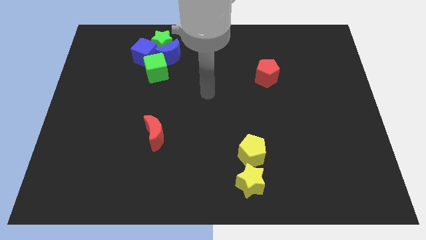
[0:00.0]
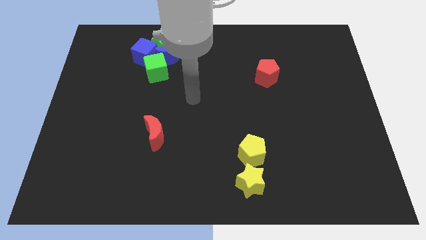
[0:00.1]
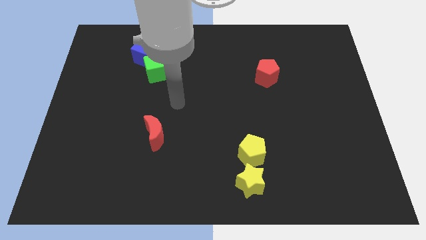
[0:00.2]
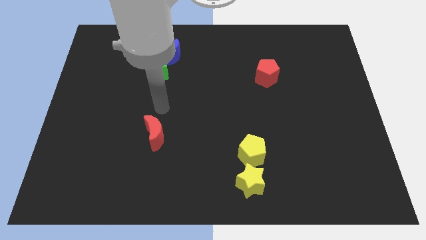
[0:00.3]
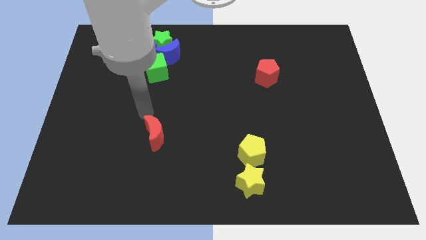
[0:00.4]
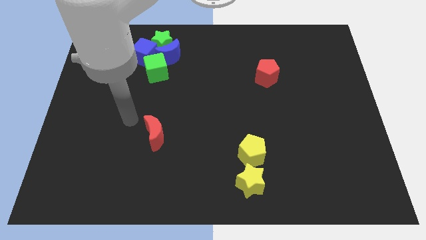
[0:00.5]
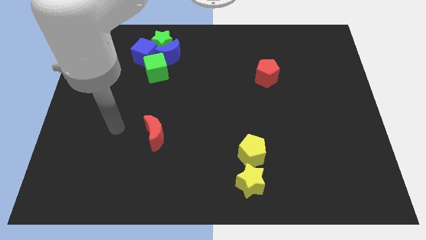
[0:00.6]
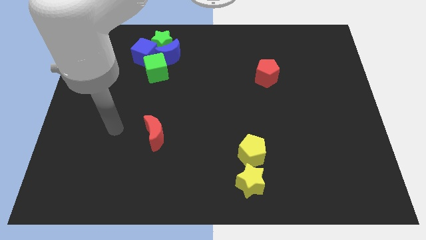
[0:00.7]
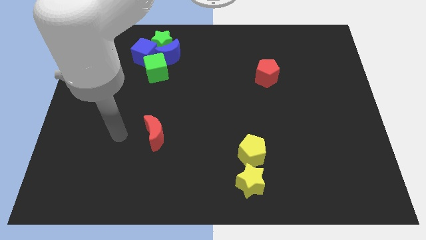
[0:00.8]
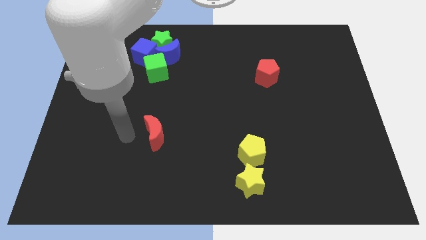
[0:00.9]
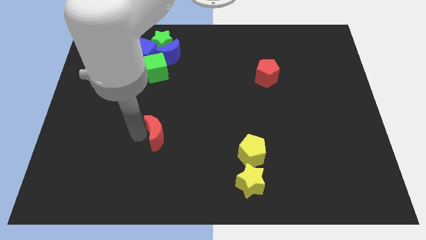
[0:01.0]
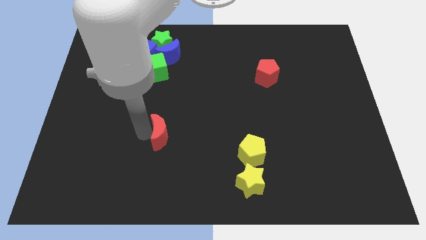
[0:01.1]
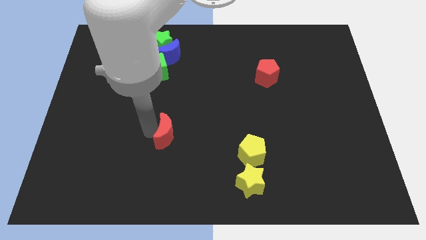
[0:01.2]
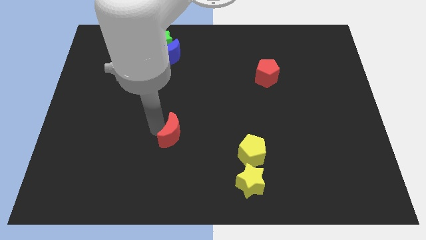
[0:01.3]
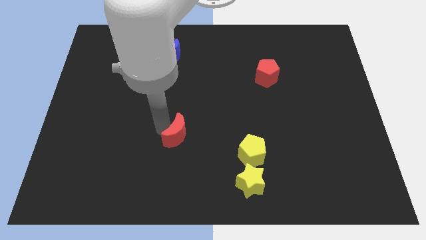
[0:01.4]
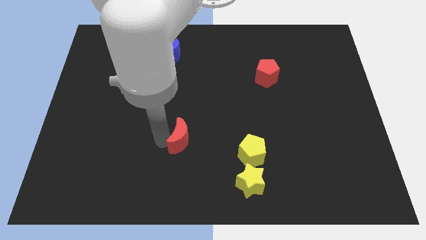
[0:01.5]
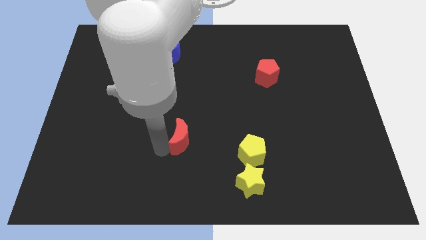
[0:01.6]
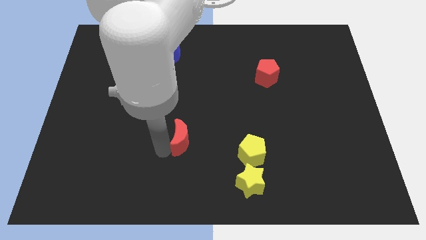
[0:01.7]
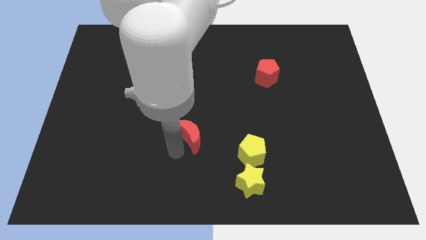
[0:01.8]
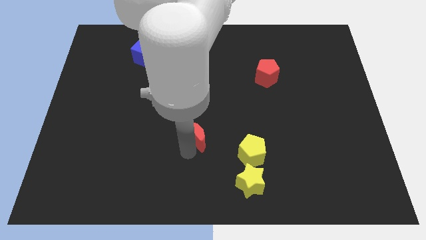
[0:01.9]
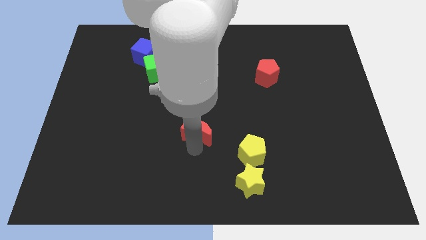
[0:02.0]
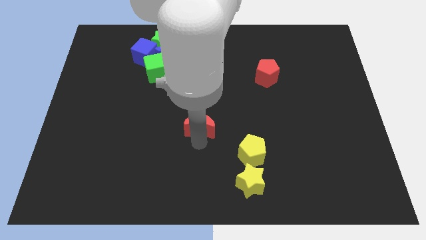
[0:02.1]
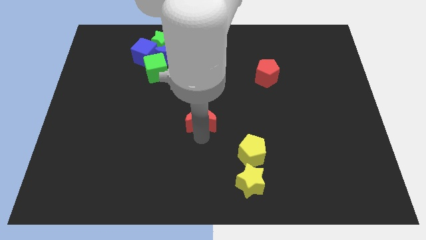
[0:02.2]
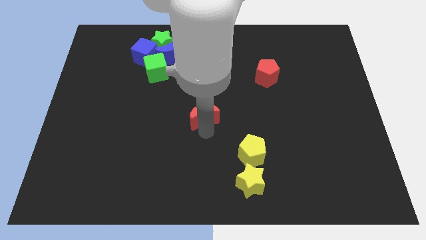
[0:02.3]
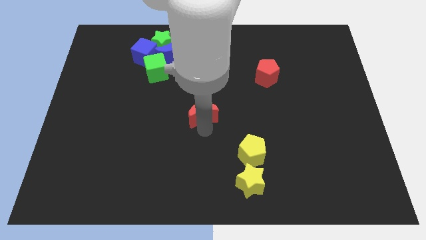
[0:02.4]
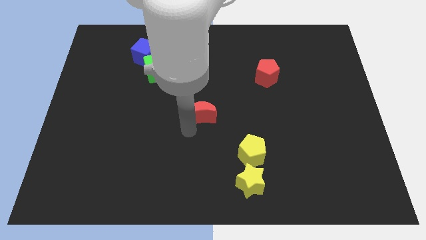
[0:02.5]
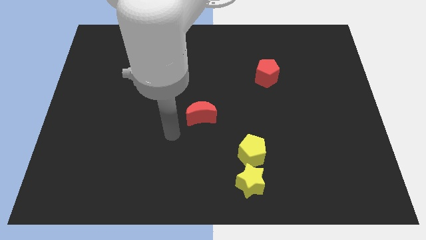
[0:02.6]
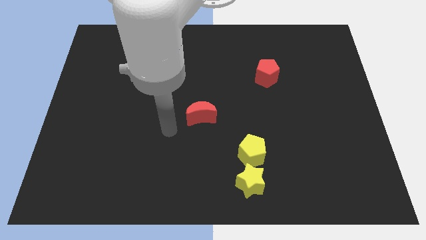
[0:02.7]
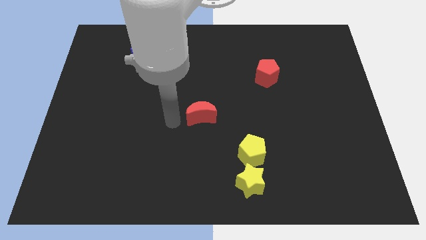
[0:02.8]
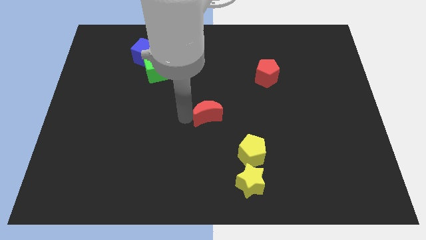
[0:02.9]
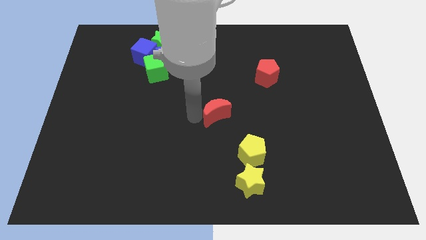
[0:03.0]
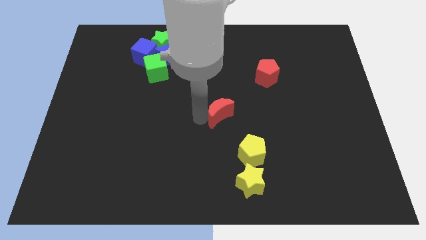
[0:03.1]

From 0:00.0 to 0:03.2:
place the red crescent above the yellow pentagon

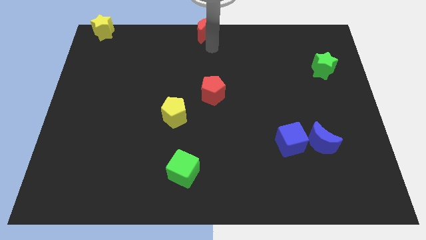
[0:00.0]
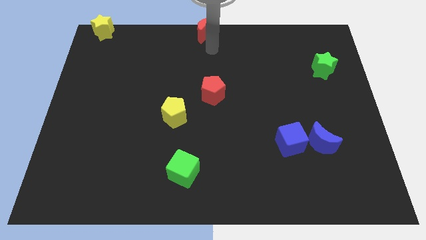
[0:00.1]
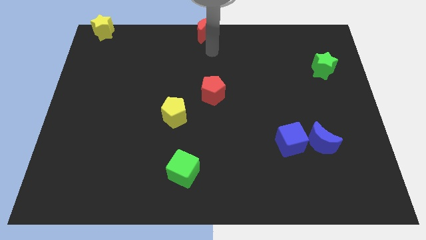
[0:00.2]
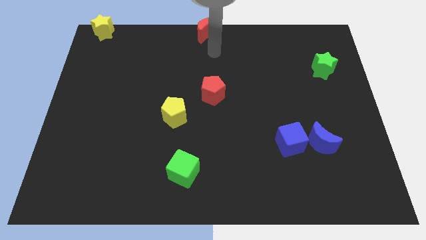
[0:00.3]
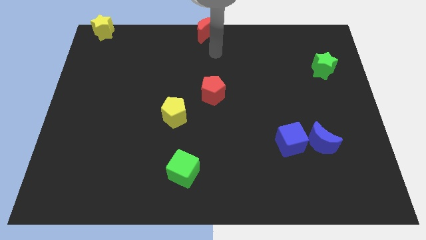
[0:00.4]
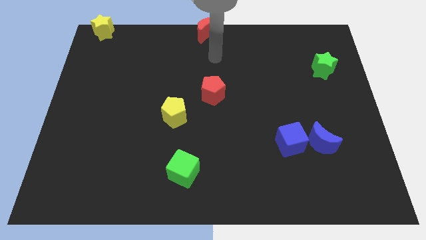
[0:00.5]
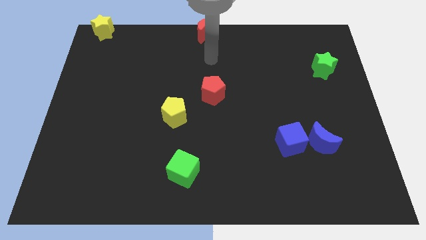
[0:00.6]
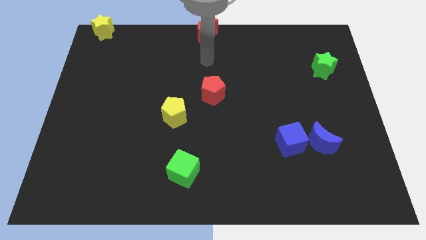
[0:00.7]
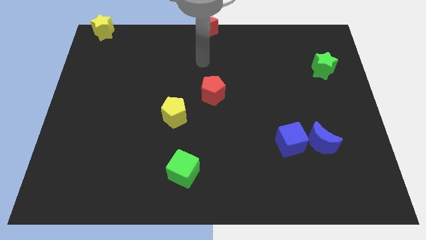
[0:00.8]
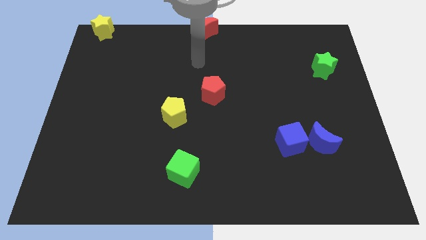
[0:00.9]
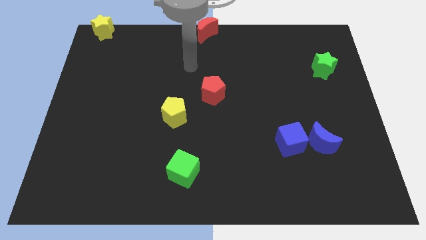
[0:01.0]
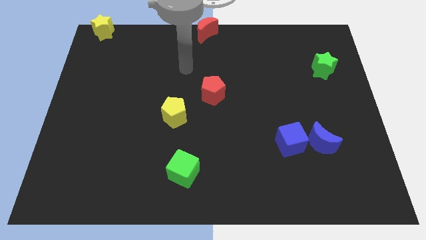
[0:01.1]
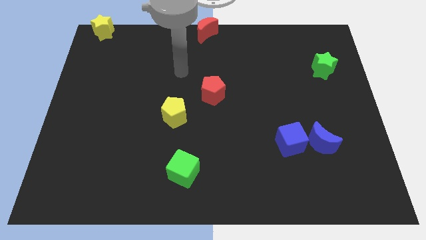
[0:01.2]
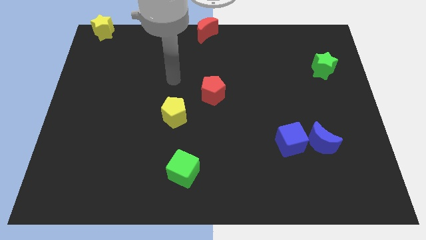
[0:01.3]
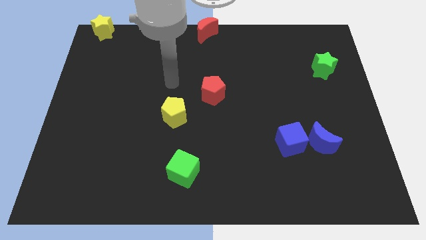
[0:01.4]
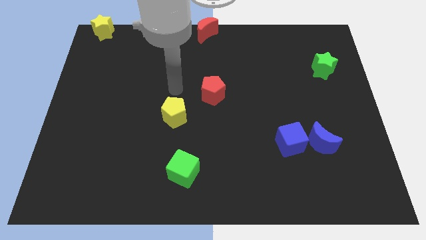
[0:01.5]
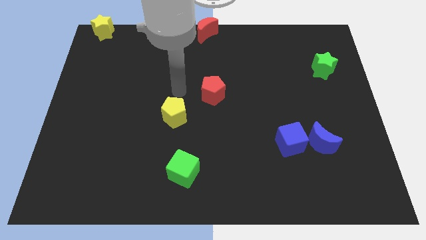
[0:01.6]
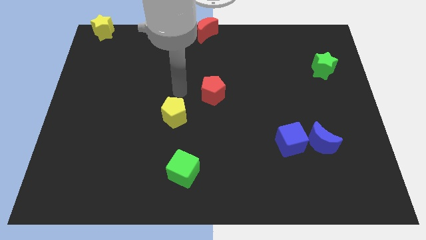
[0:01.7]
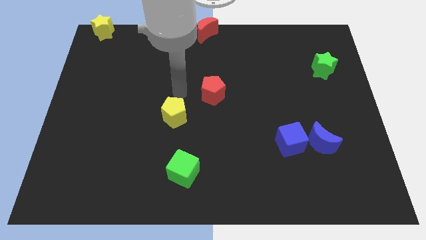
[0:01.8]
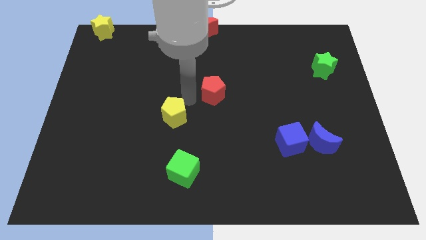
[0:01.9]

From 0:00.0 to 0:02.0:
point the arm towards yellow pentagon

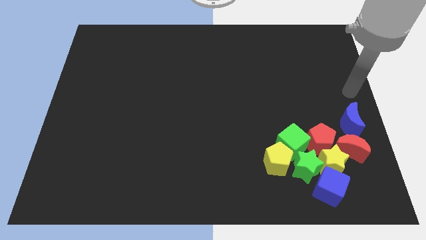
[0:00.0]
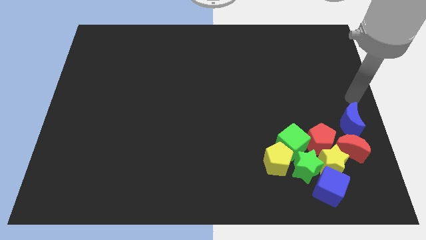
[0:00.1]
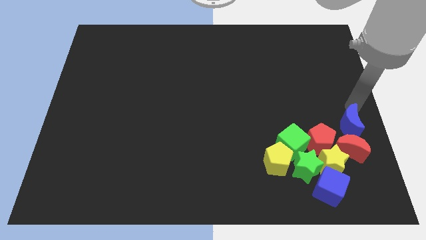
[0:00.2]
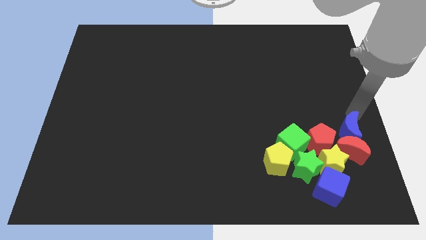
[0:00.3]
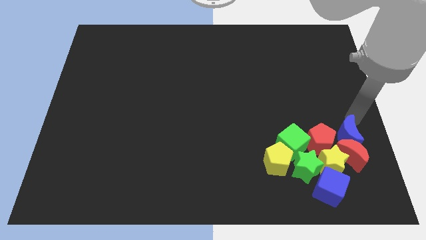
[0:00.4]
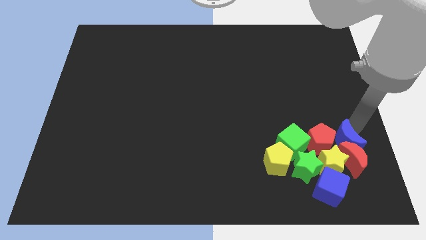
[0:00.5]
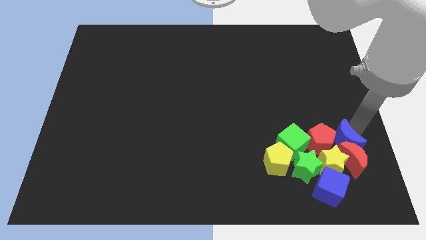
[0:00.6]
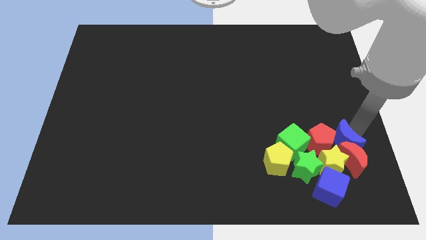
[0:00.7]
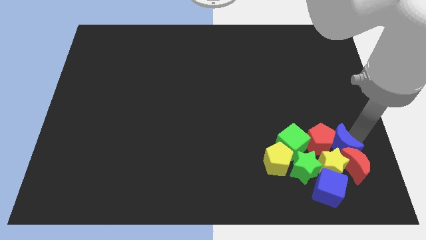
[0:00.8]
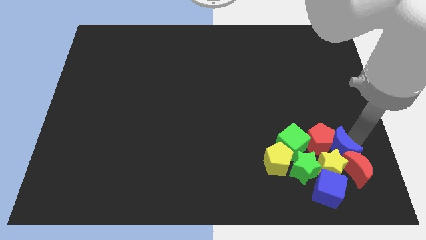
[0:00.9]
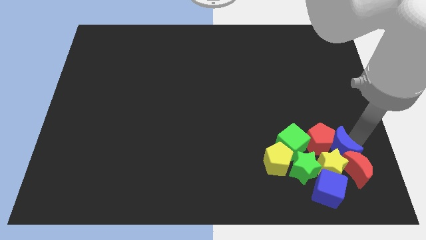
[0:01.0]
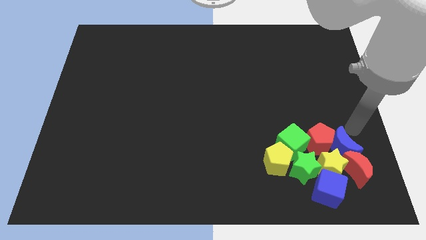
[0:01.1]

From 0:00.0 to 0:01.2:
push the blue moon into the group of blocks

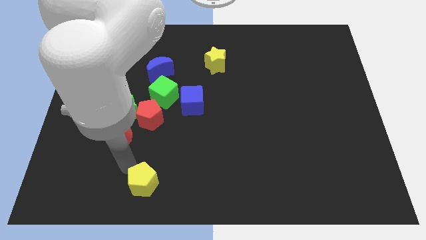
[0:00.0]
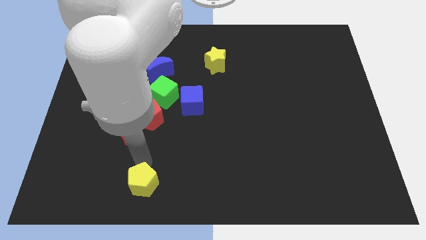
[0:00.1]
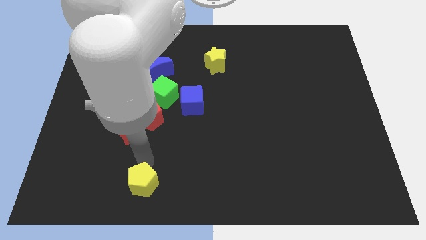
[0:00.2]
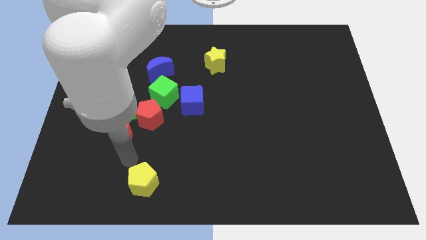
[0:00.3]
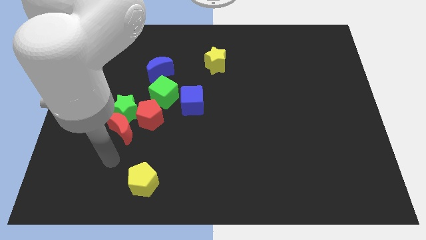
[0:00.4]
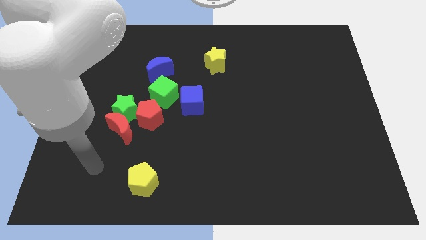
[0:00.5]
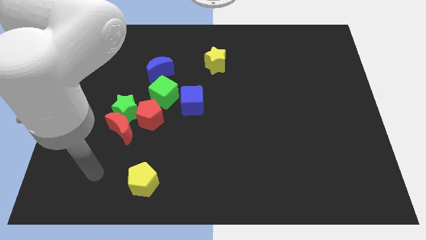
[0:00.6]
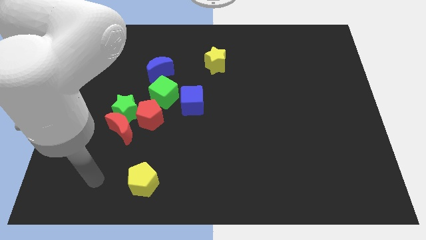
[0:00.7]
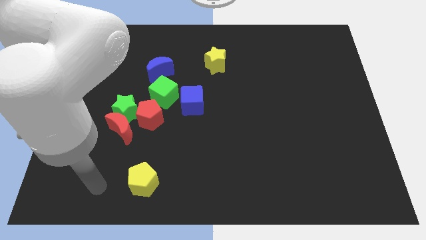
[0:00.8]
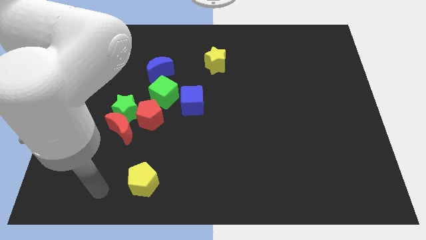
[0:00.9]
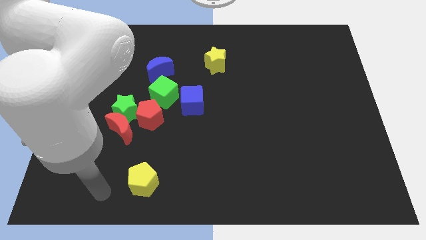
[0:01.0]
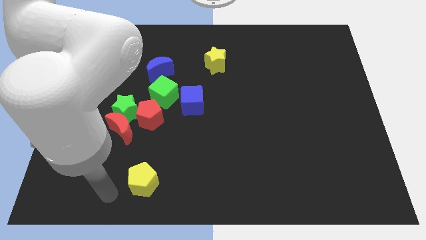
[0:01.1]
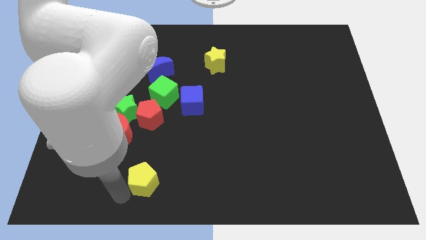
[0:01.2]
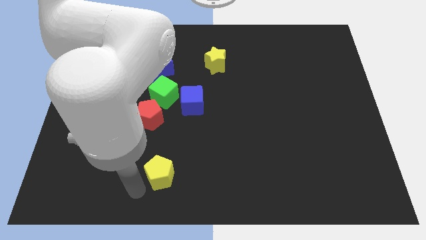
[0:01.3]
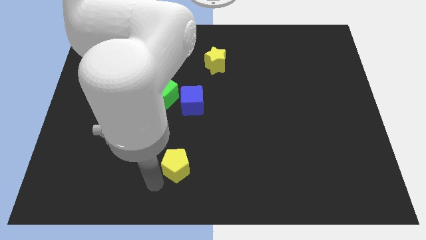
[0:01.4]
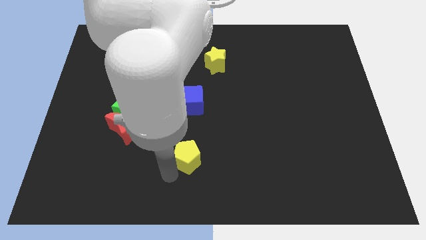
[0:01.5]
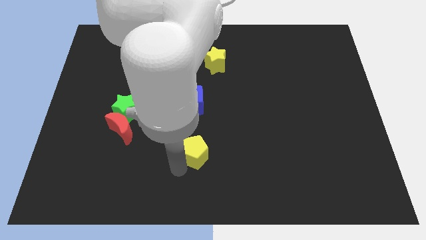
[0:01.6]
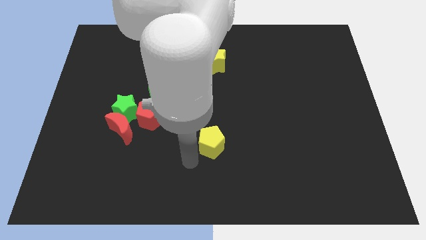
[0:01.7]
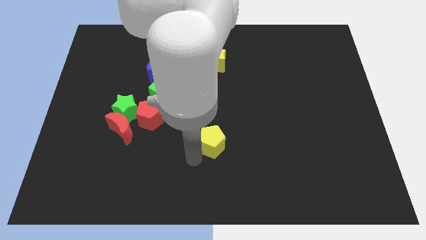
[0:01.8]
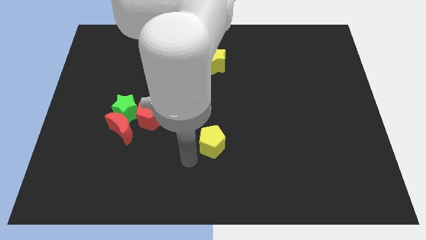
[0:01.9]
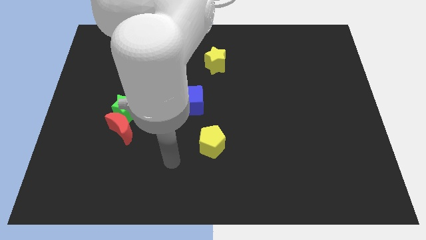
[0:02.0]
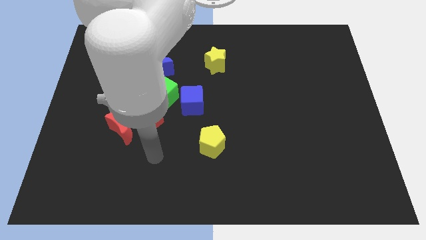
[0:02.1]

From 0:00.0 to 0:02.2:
slide yellow pentagon towards center

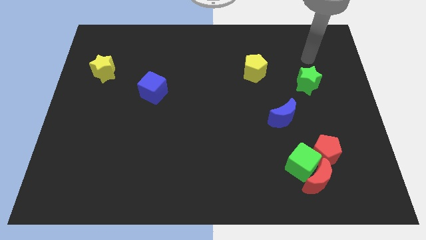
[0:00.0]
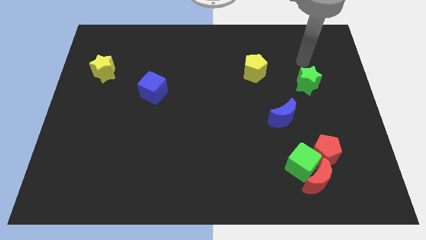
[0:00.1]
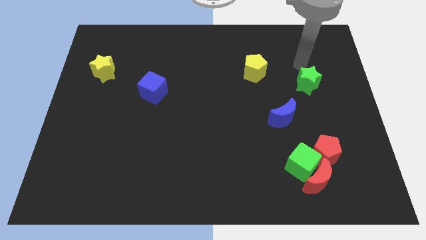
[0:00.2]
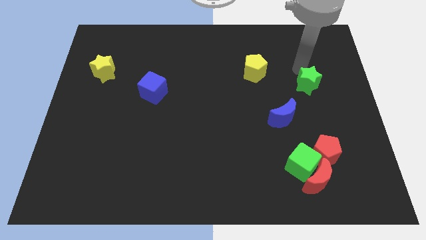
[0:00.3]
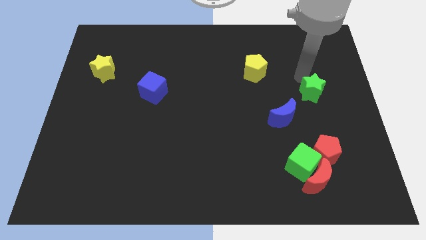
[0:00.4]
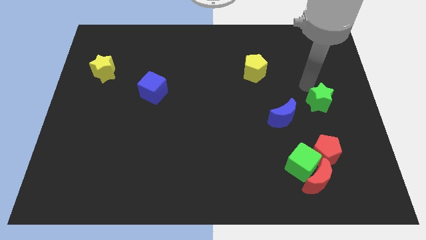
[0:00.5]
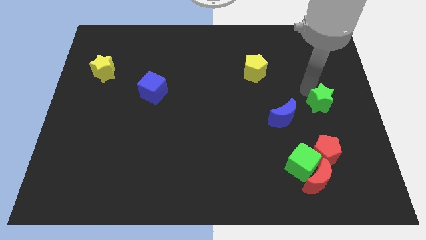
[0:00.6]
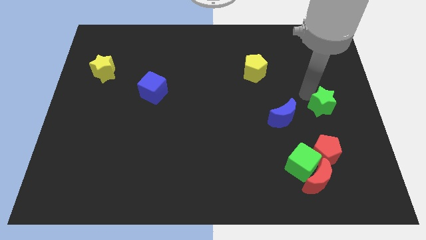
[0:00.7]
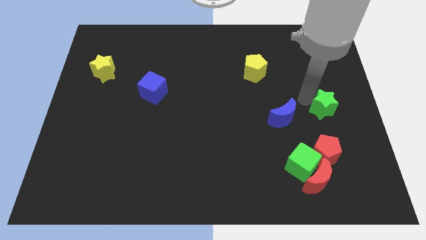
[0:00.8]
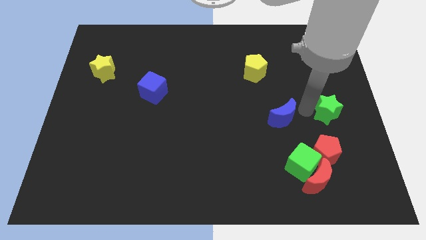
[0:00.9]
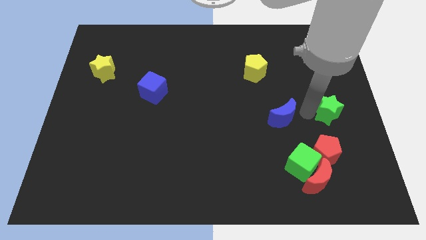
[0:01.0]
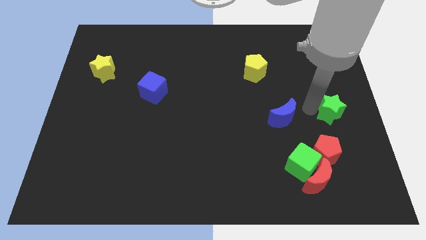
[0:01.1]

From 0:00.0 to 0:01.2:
place the green star to the right of the blue moon
